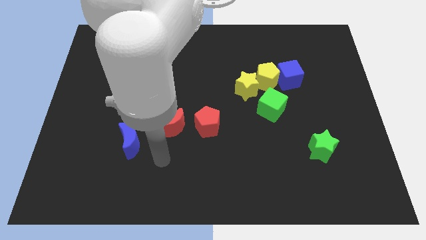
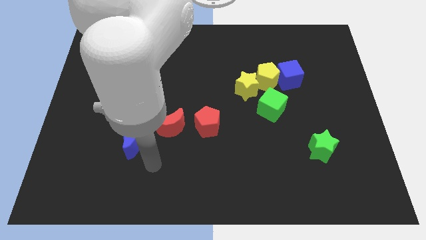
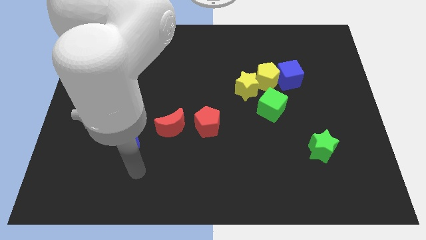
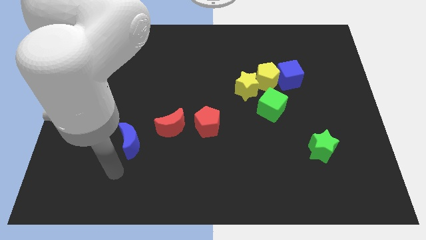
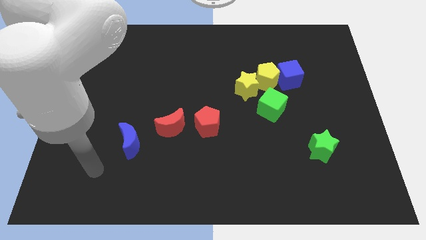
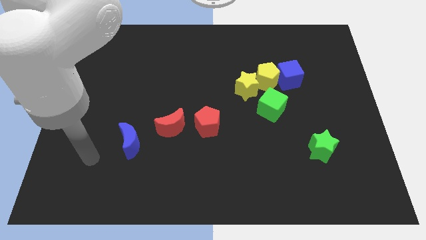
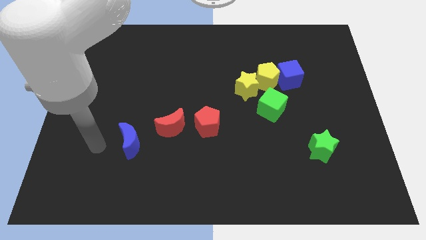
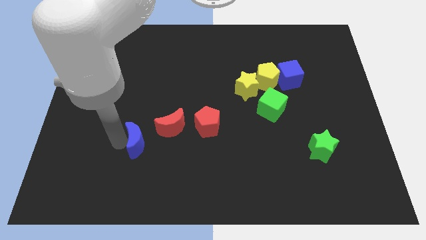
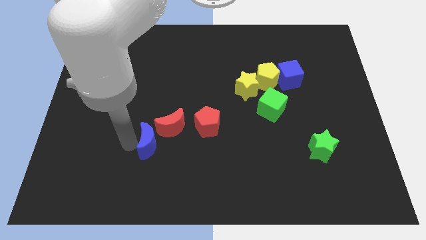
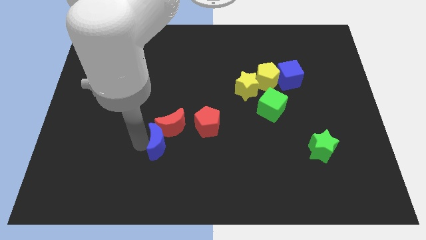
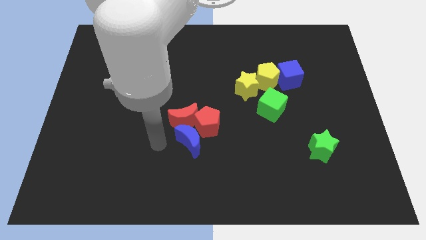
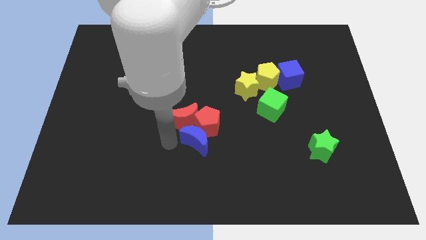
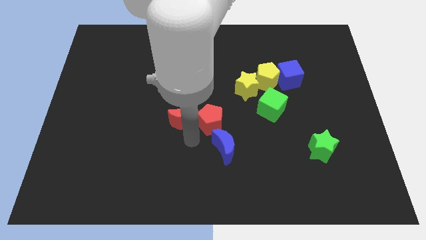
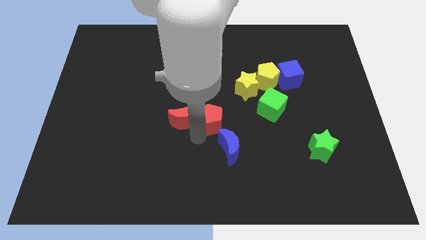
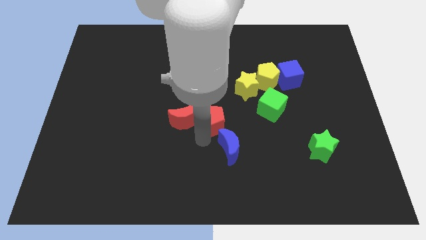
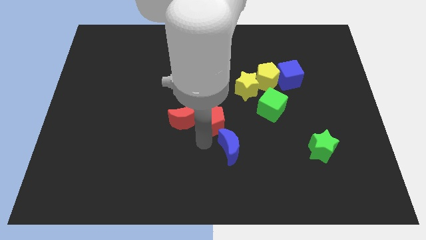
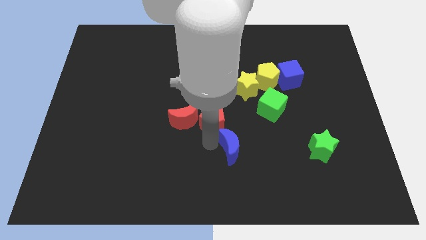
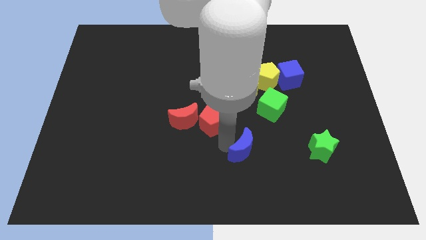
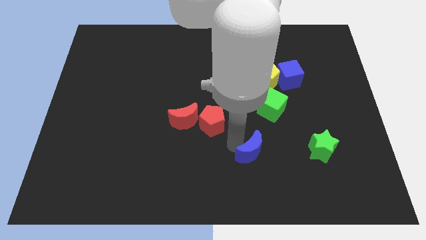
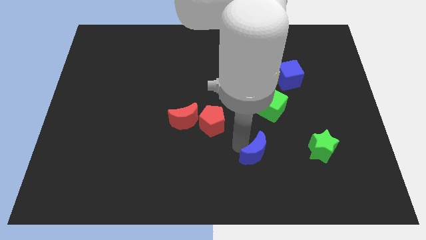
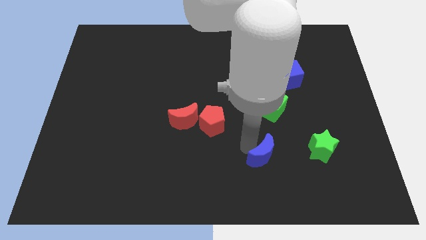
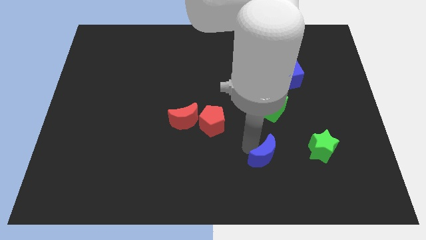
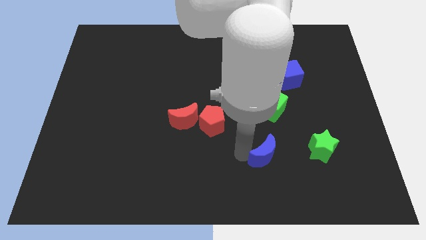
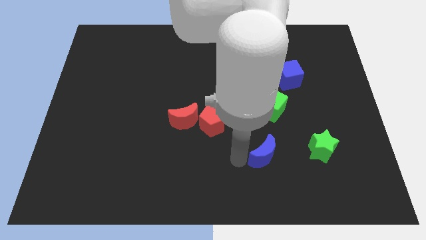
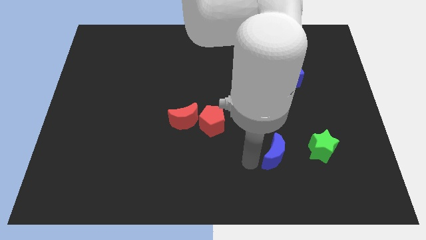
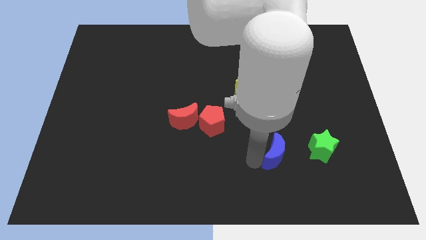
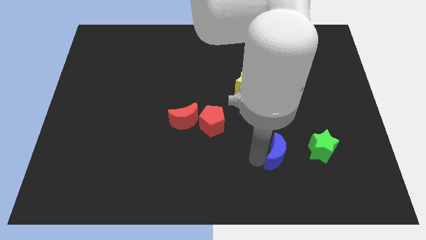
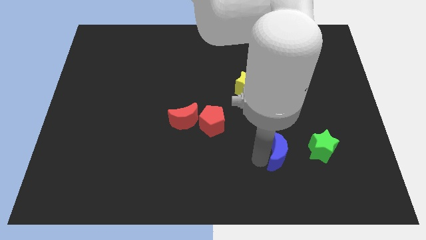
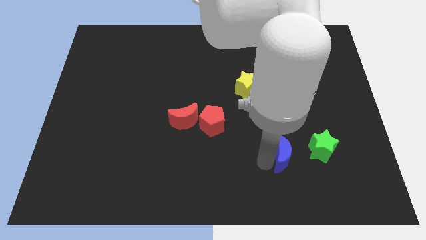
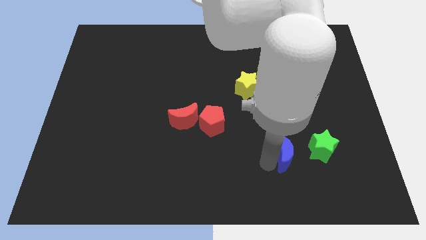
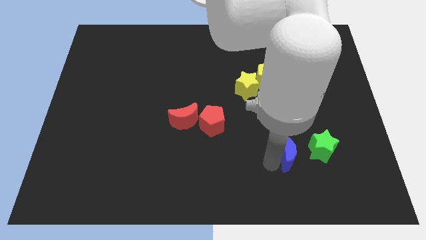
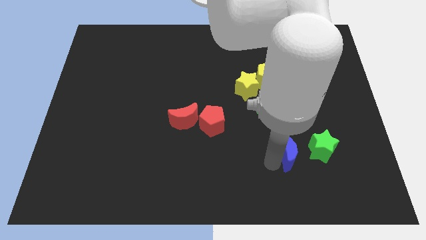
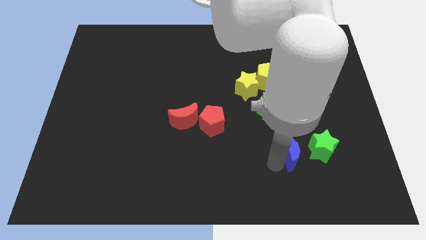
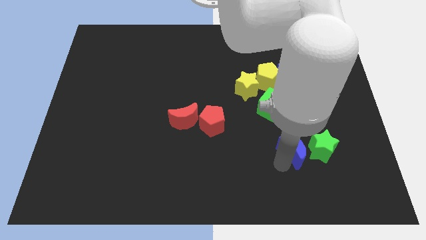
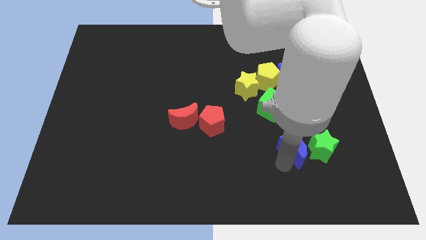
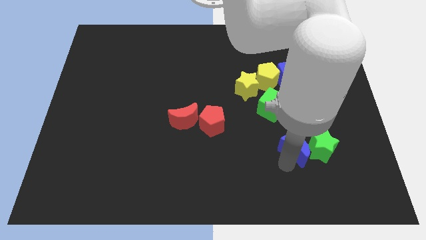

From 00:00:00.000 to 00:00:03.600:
put the blue moon next to the green star

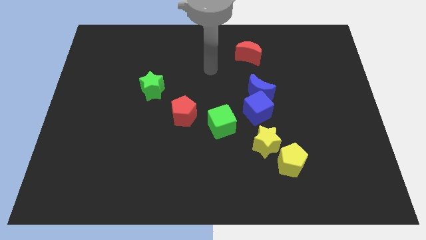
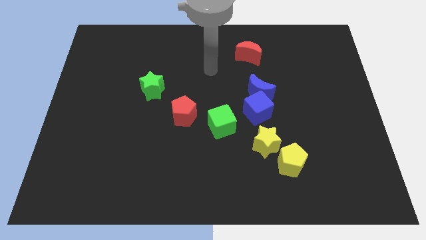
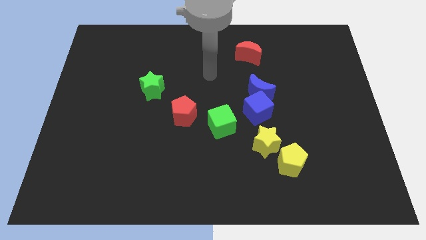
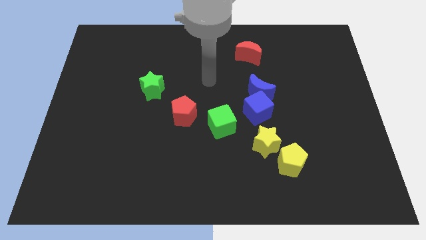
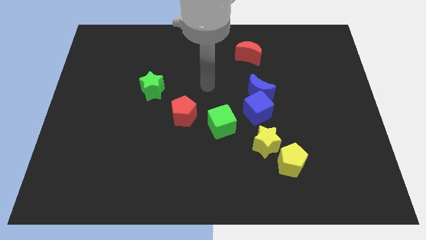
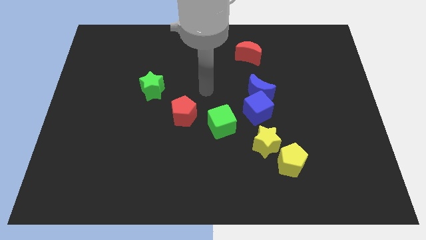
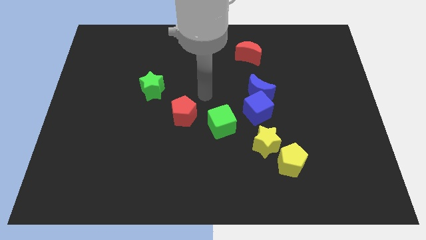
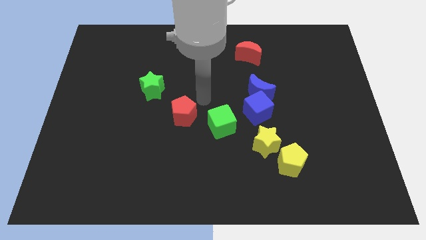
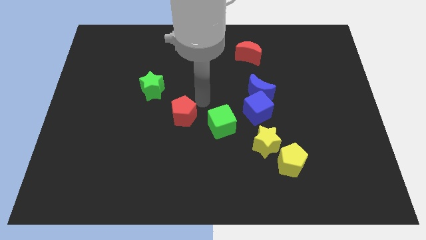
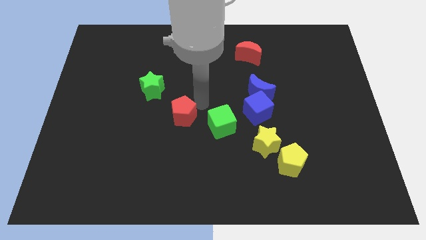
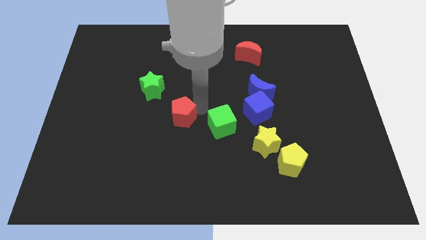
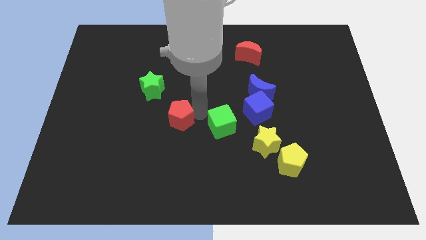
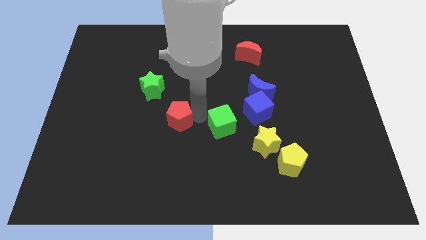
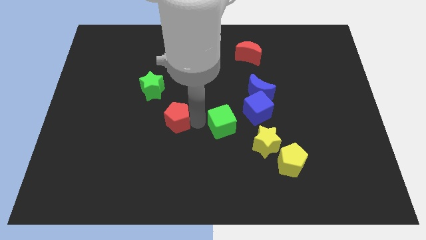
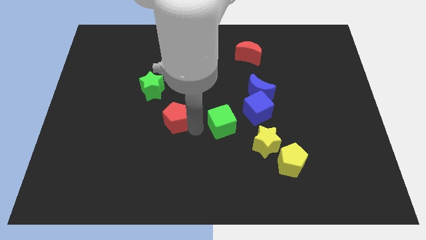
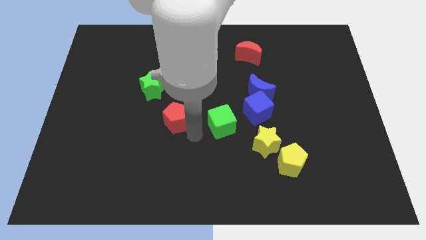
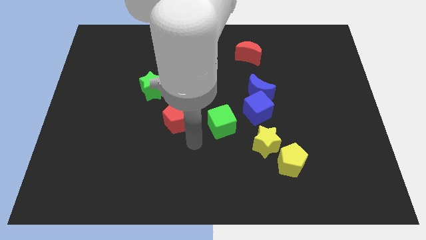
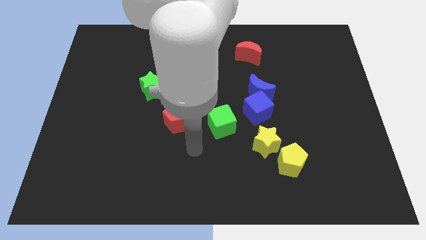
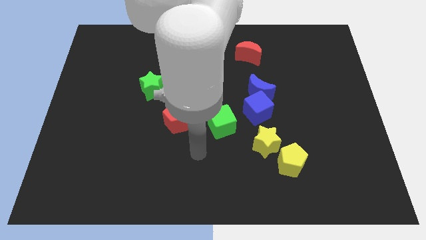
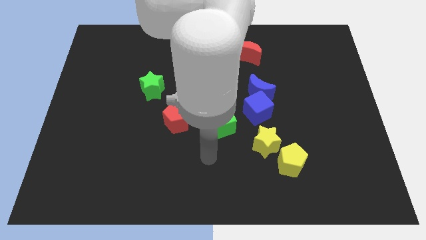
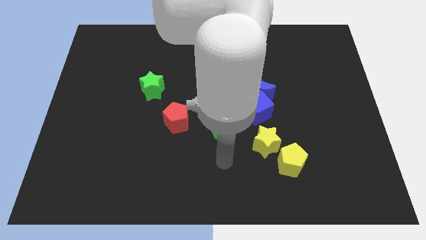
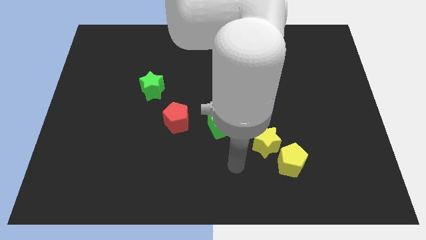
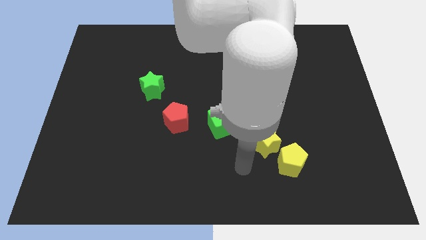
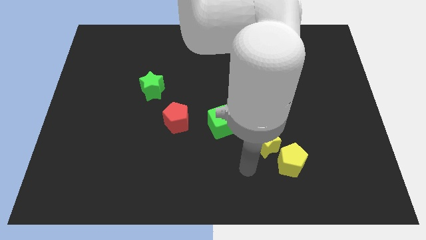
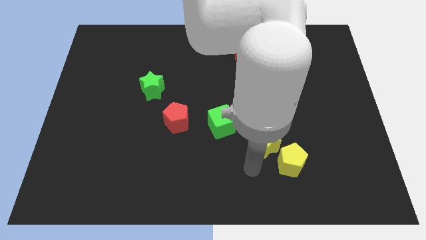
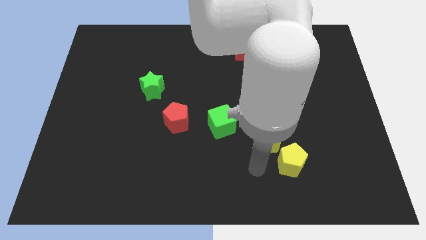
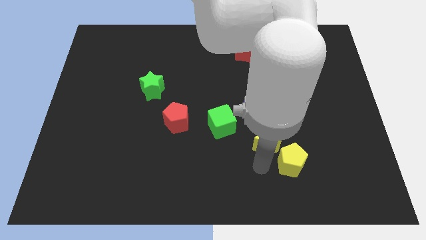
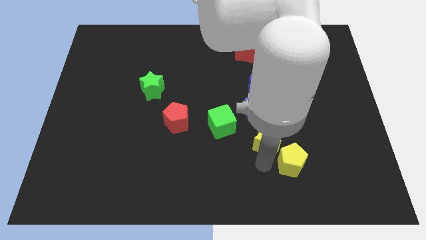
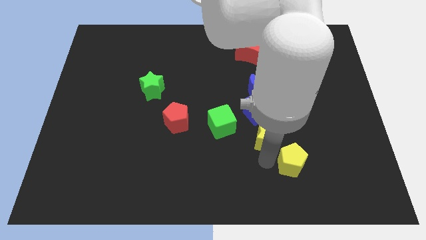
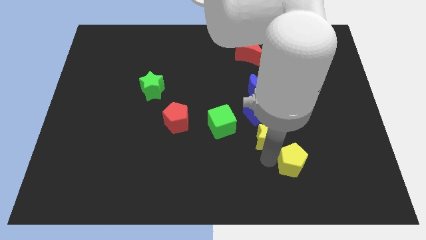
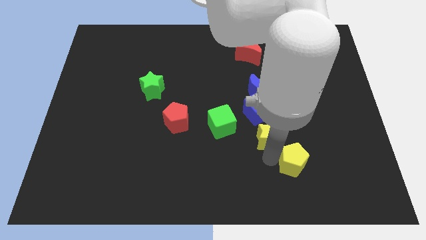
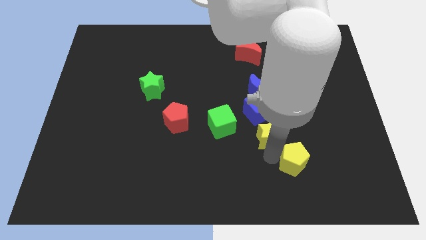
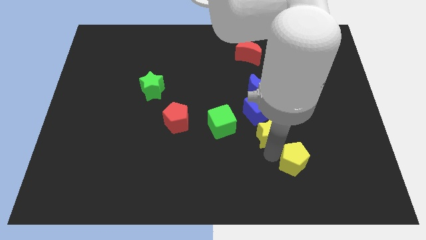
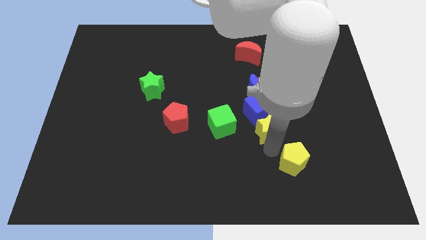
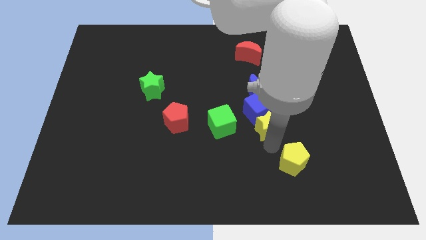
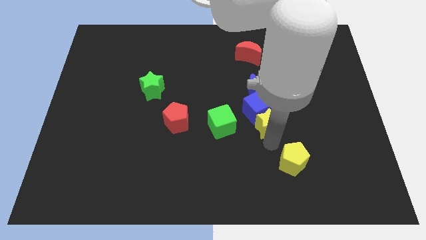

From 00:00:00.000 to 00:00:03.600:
put the yellow star to the blue cube

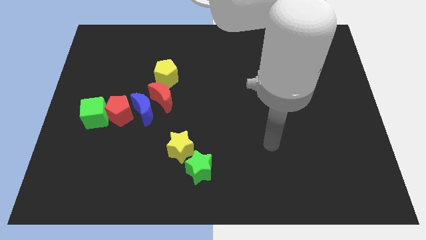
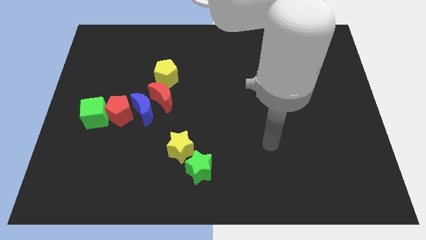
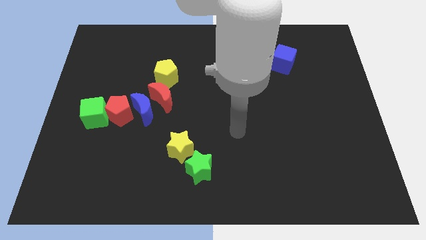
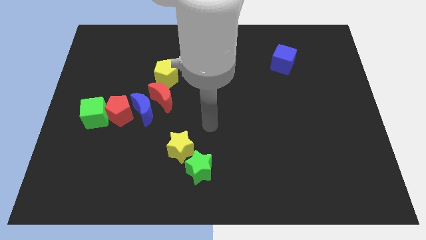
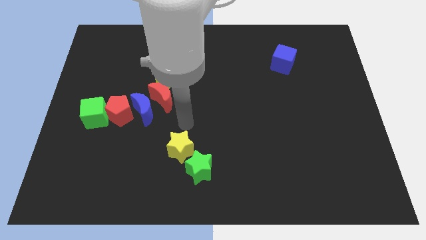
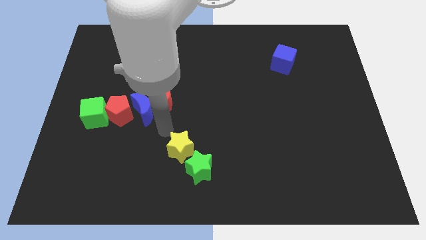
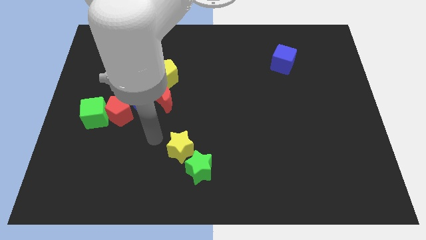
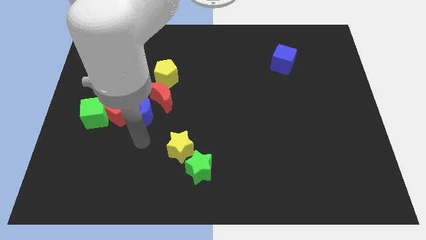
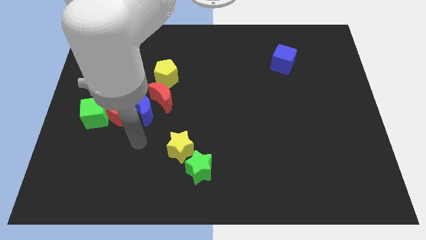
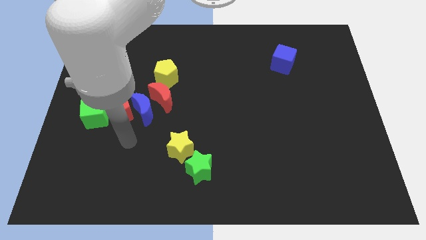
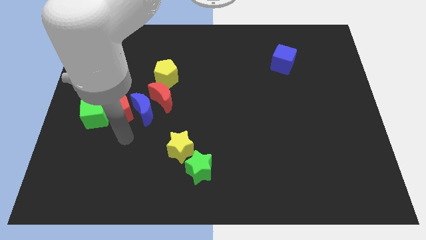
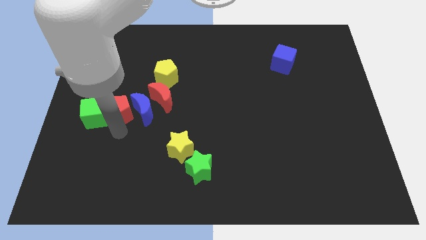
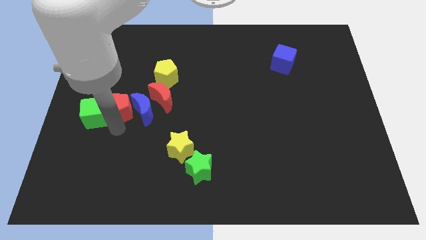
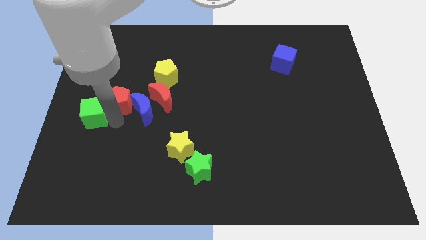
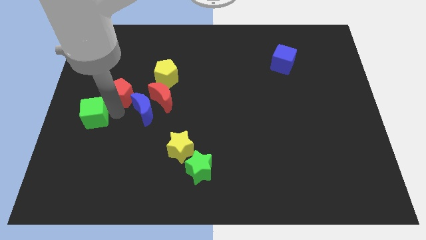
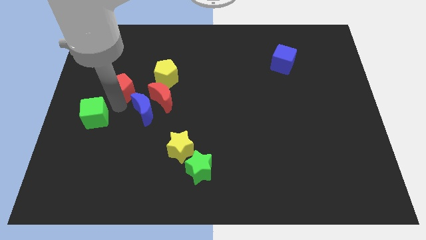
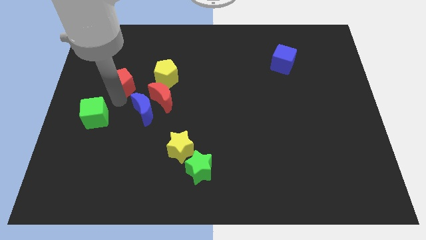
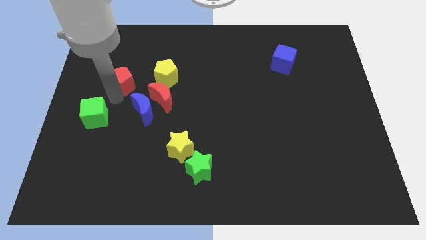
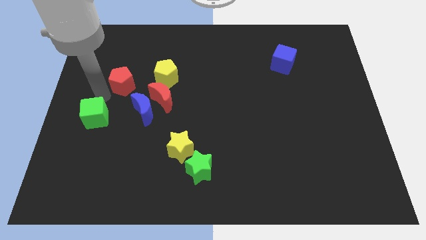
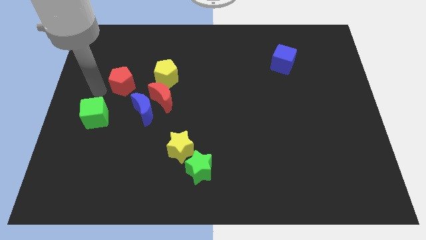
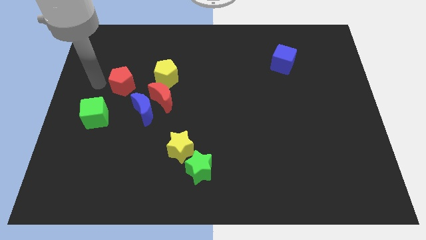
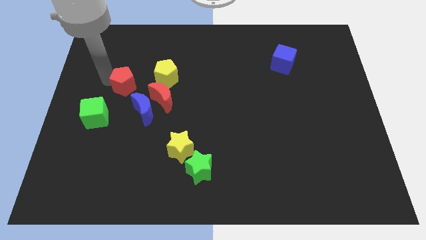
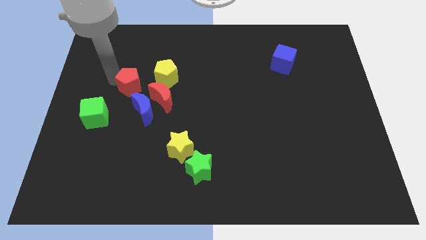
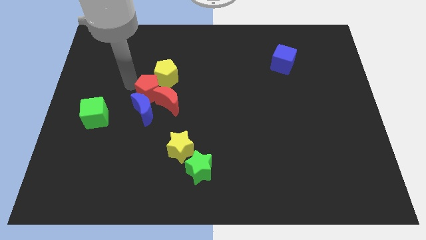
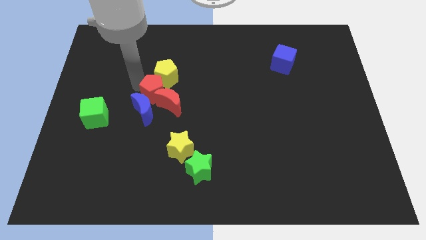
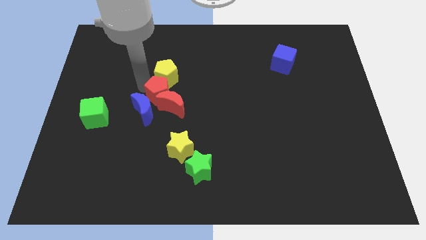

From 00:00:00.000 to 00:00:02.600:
push the red pentagon to the red moon
